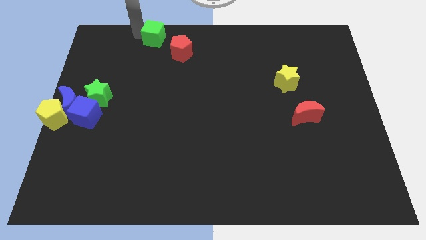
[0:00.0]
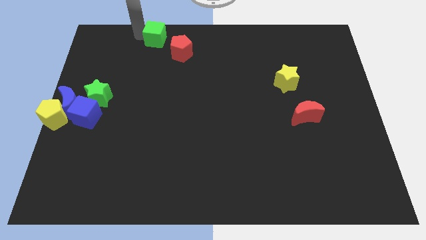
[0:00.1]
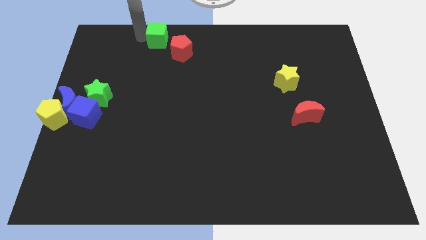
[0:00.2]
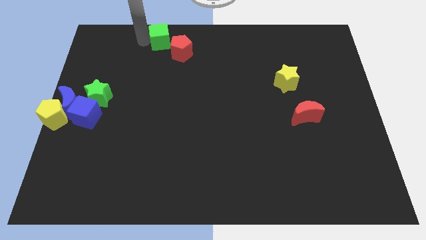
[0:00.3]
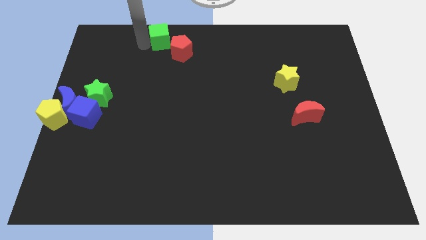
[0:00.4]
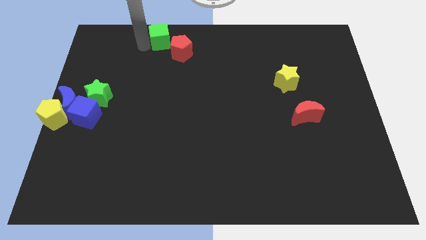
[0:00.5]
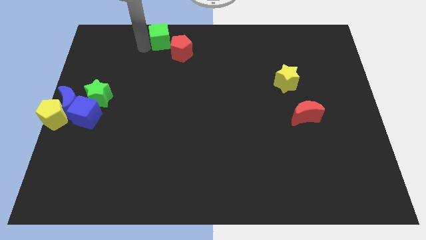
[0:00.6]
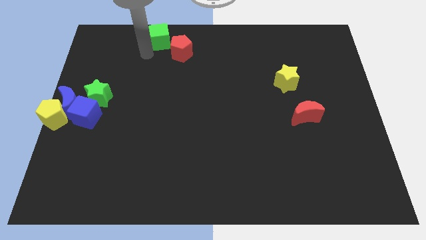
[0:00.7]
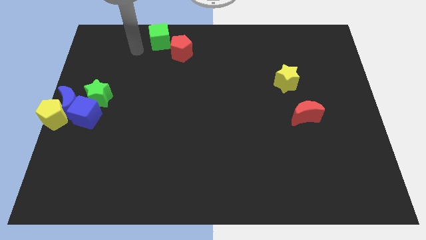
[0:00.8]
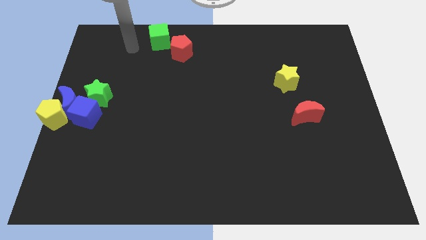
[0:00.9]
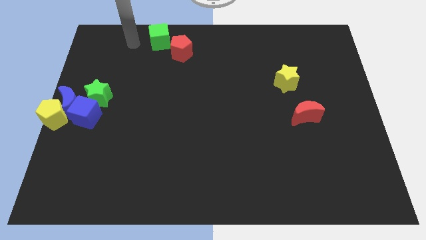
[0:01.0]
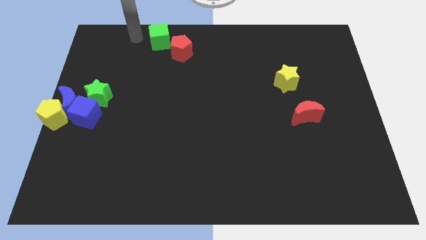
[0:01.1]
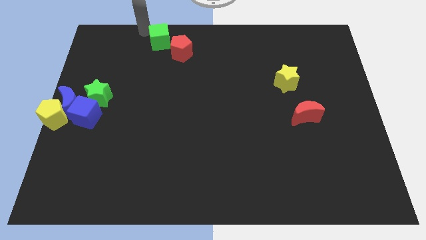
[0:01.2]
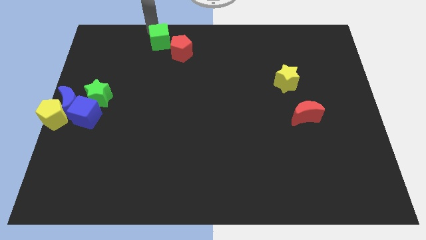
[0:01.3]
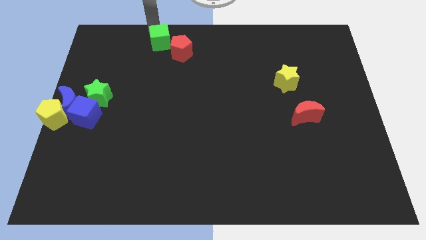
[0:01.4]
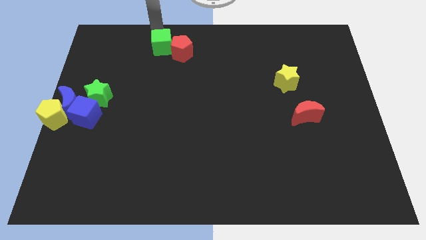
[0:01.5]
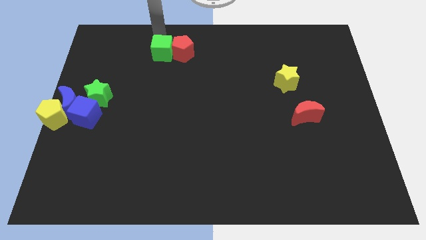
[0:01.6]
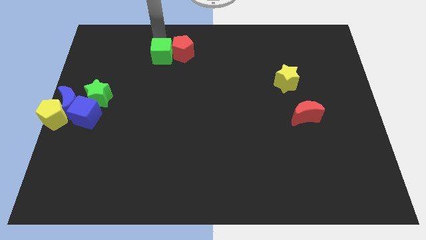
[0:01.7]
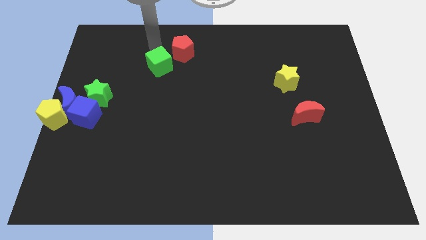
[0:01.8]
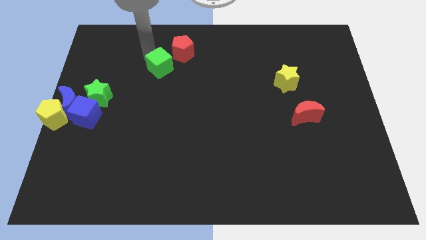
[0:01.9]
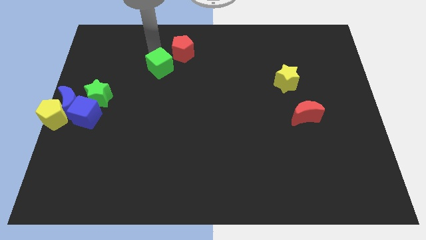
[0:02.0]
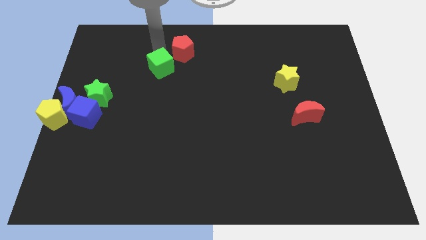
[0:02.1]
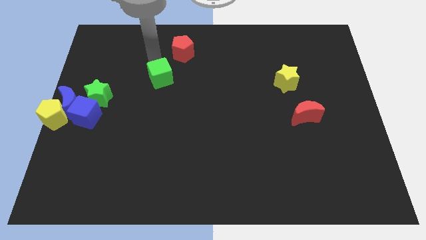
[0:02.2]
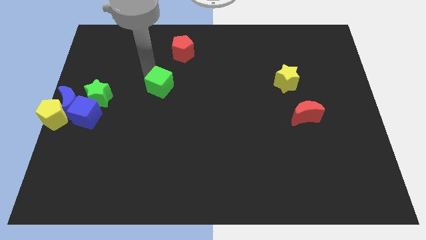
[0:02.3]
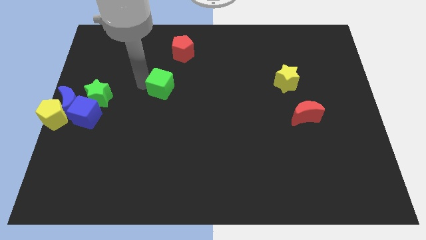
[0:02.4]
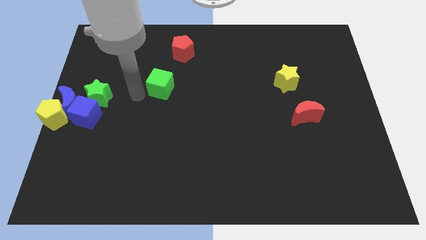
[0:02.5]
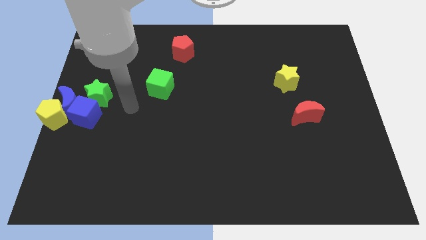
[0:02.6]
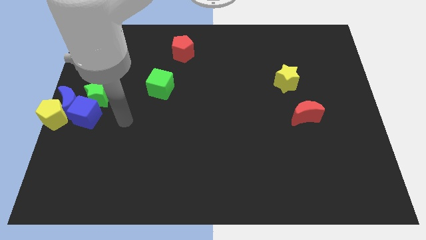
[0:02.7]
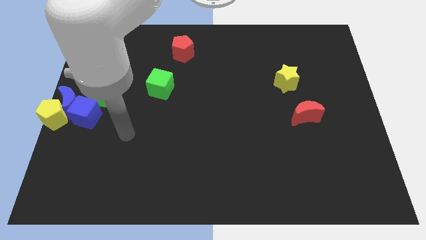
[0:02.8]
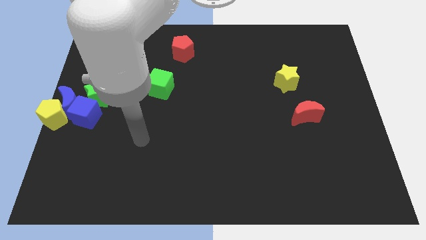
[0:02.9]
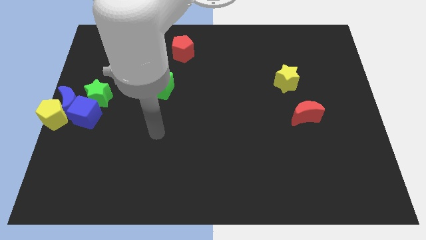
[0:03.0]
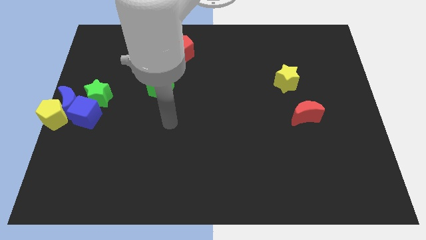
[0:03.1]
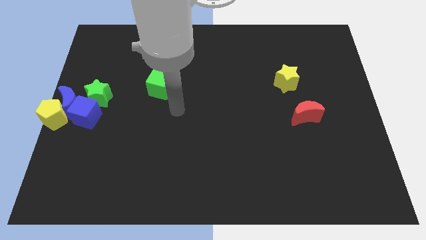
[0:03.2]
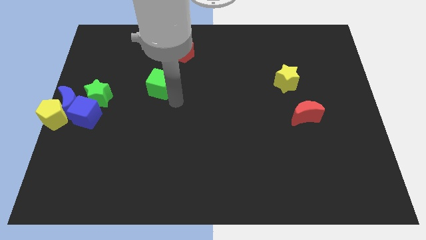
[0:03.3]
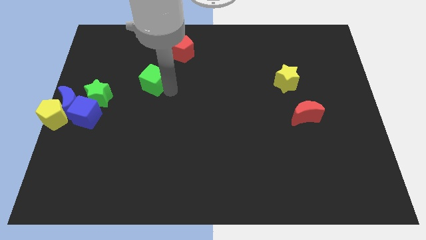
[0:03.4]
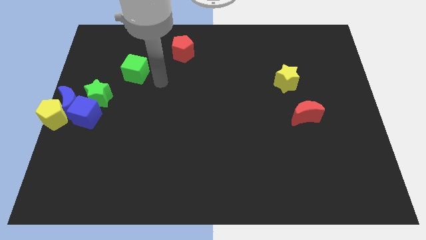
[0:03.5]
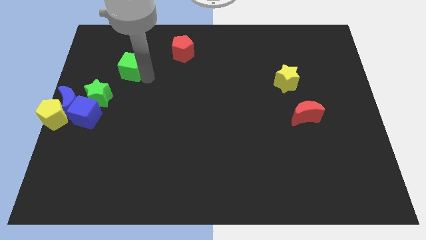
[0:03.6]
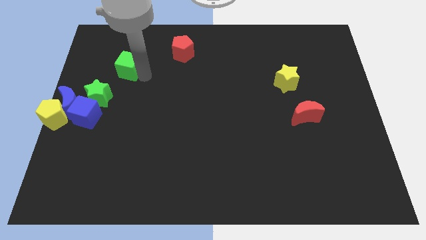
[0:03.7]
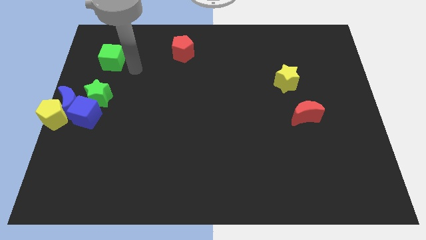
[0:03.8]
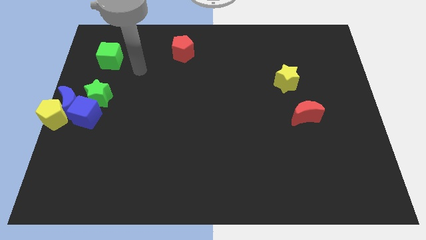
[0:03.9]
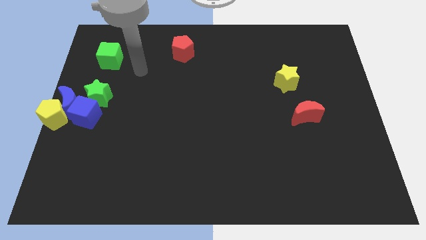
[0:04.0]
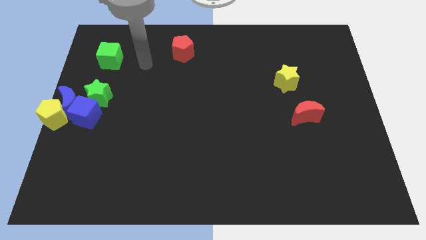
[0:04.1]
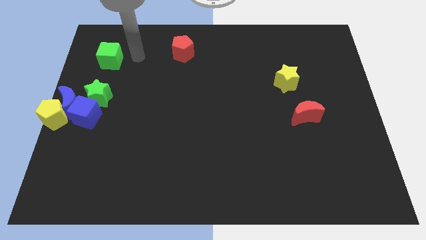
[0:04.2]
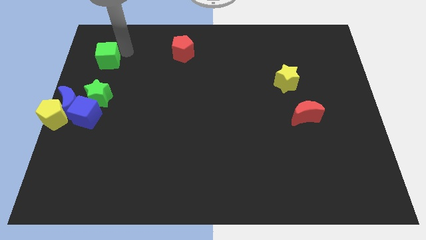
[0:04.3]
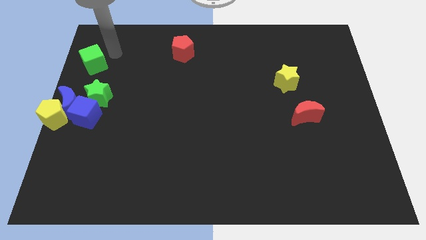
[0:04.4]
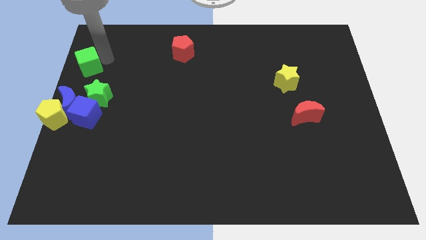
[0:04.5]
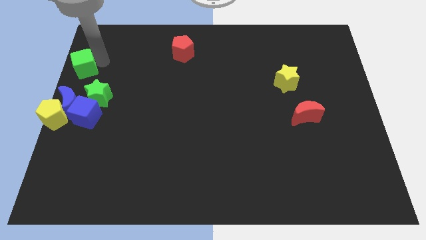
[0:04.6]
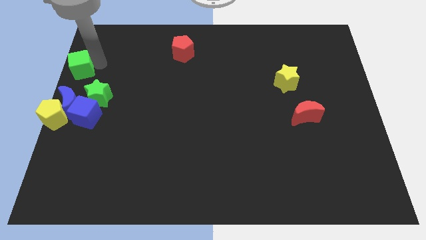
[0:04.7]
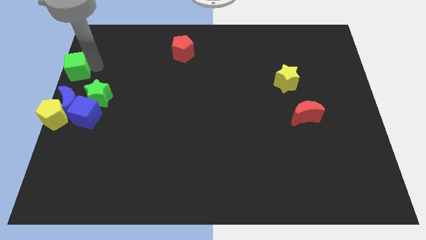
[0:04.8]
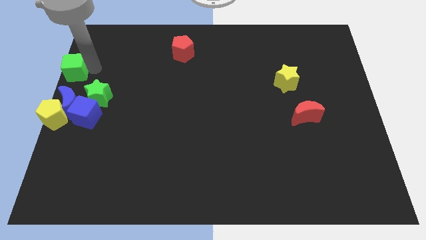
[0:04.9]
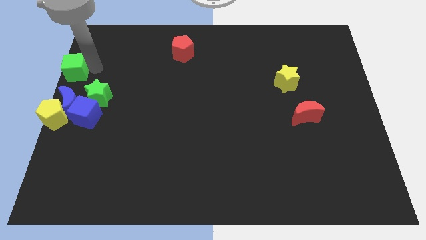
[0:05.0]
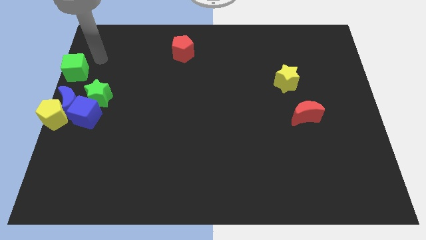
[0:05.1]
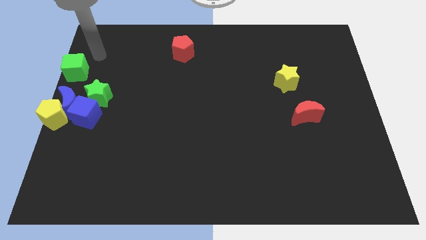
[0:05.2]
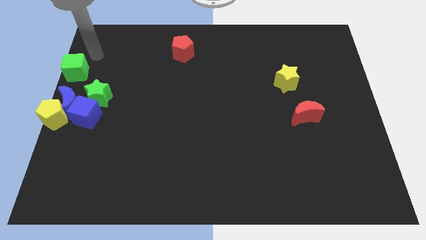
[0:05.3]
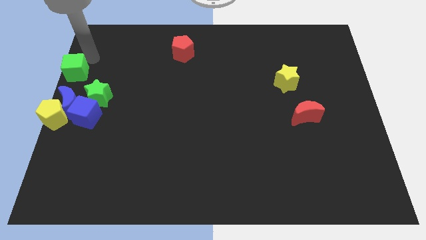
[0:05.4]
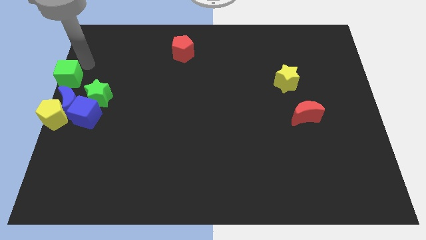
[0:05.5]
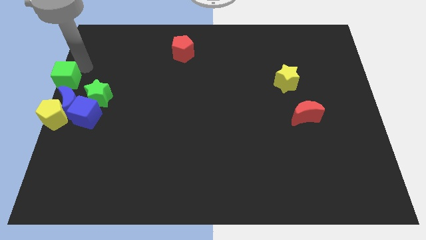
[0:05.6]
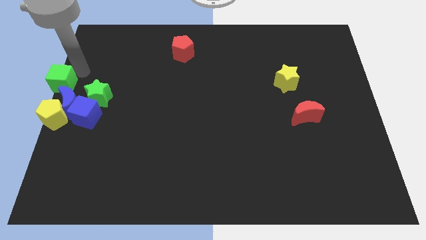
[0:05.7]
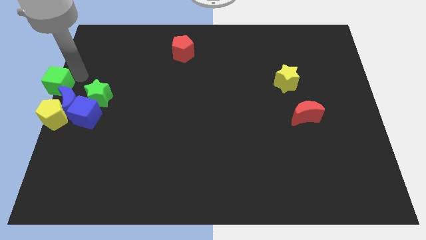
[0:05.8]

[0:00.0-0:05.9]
move the green cube towards the center left of the board

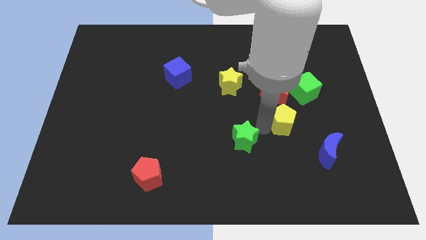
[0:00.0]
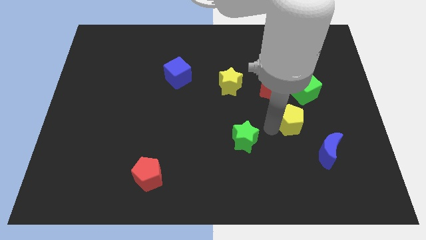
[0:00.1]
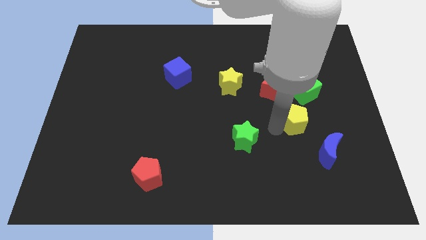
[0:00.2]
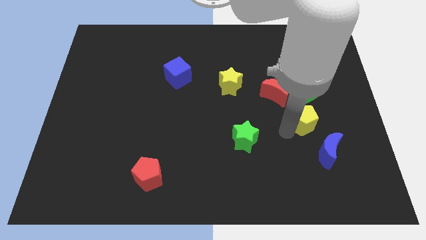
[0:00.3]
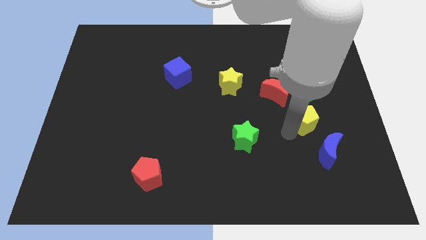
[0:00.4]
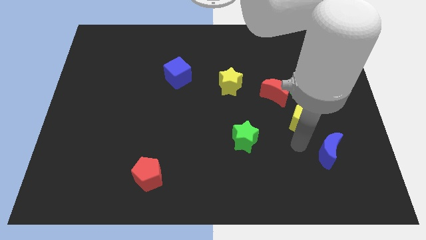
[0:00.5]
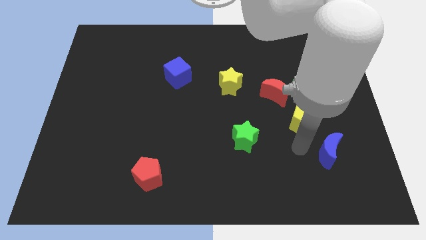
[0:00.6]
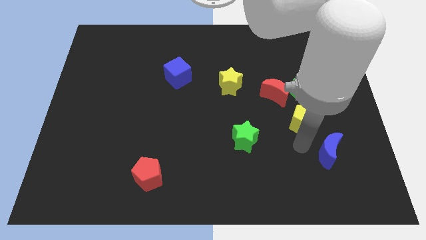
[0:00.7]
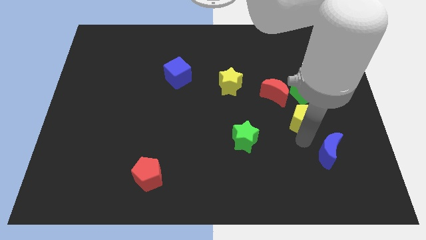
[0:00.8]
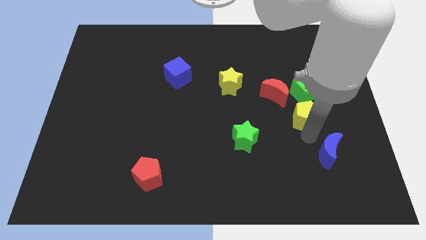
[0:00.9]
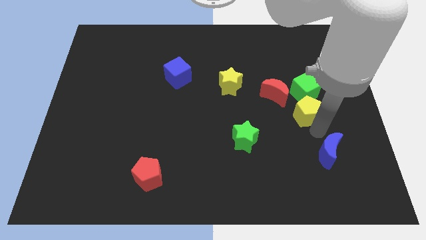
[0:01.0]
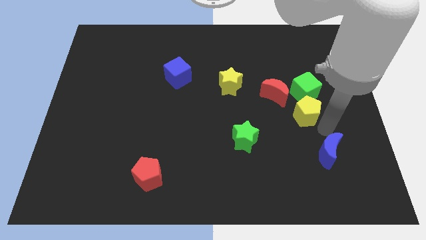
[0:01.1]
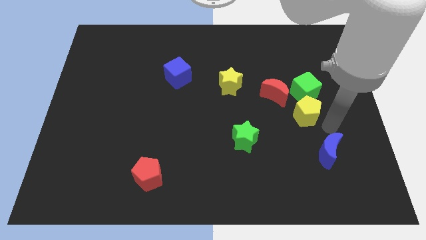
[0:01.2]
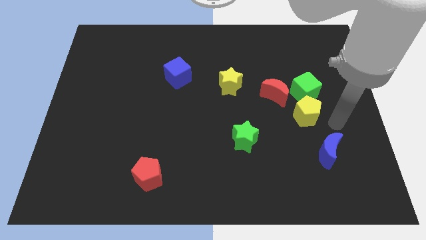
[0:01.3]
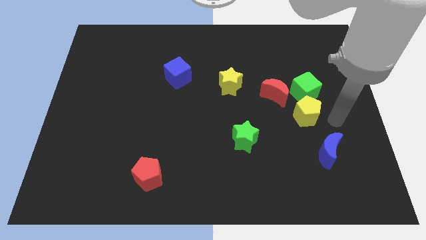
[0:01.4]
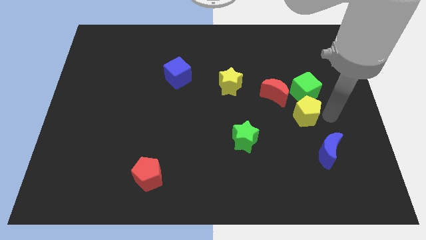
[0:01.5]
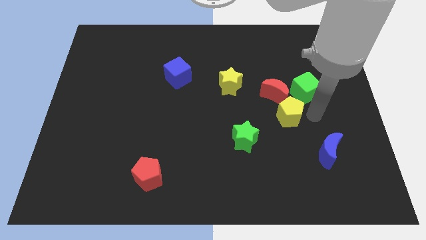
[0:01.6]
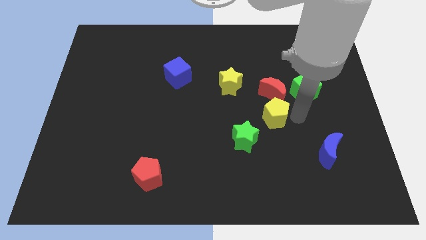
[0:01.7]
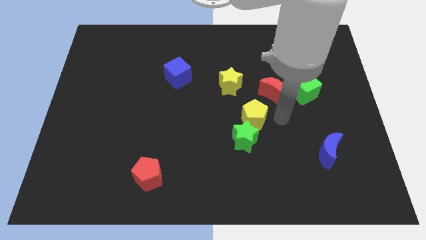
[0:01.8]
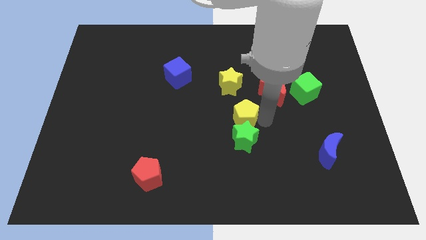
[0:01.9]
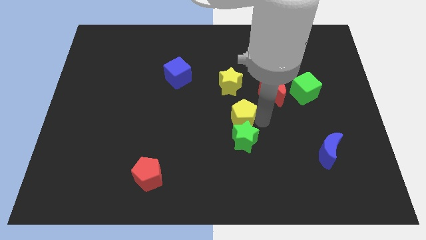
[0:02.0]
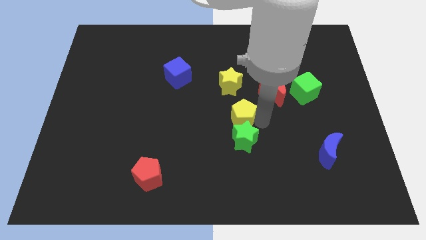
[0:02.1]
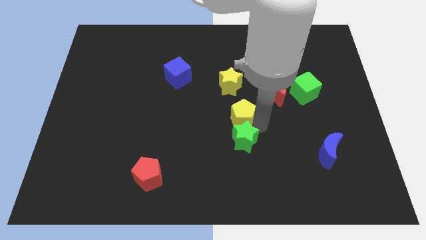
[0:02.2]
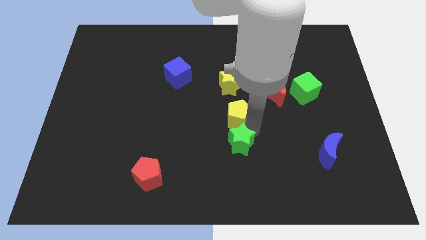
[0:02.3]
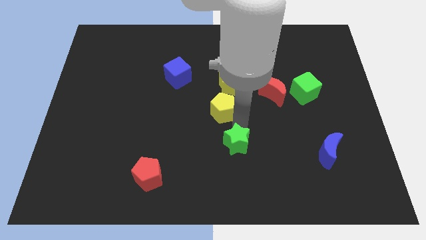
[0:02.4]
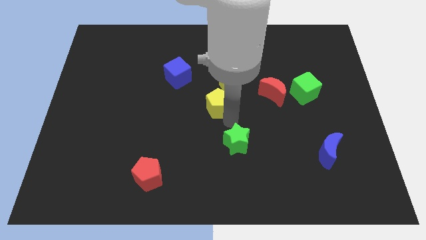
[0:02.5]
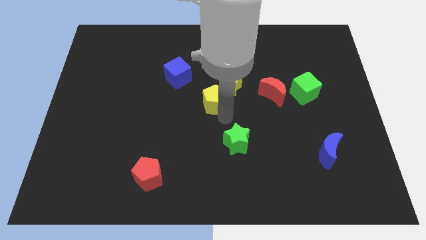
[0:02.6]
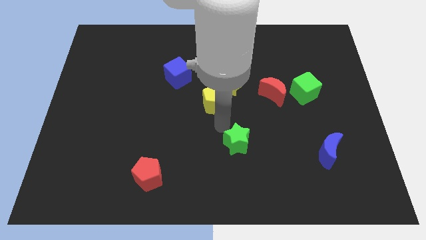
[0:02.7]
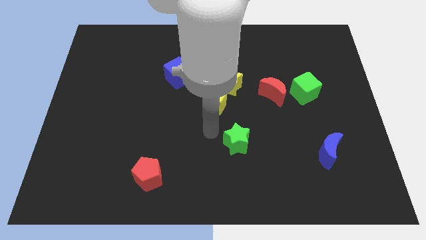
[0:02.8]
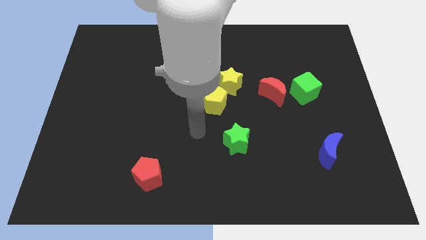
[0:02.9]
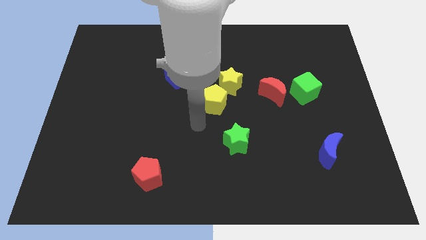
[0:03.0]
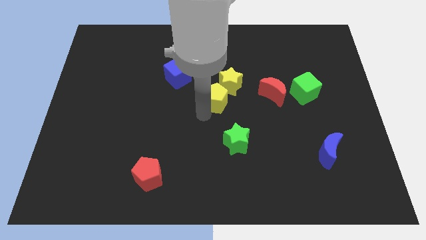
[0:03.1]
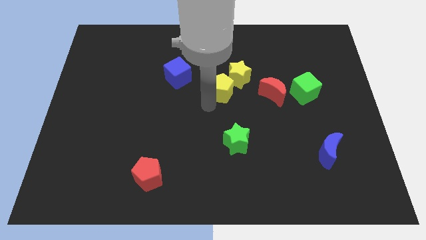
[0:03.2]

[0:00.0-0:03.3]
move yellow pentagon diagonally towards blue cube
